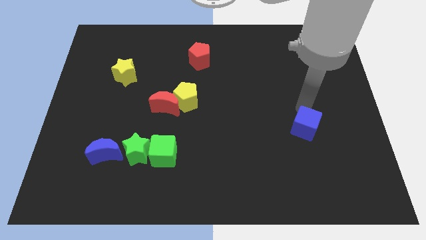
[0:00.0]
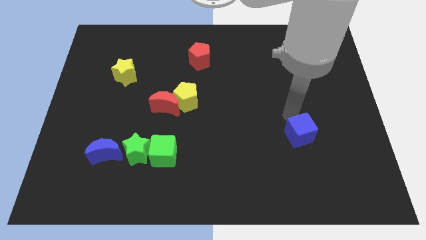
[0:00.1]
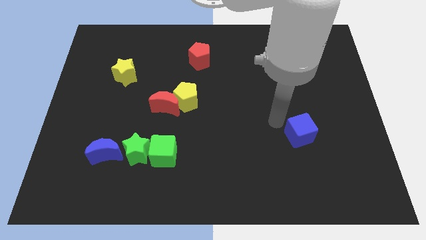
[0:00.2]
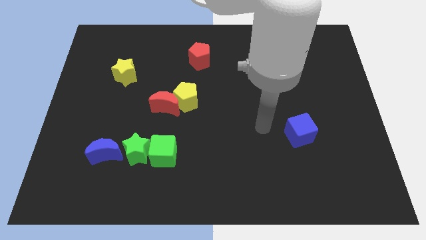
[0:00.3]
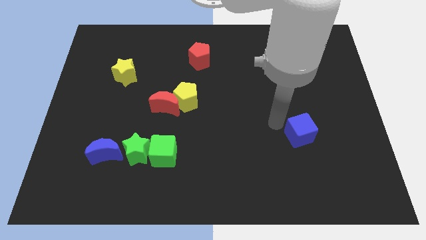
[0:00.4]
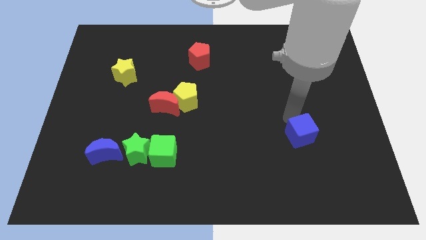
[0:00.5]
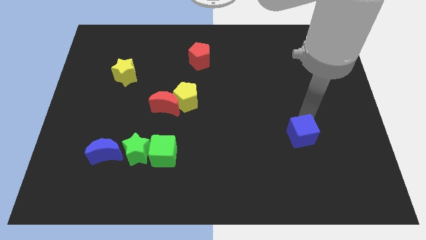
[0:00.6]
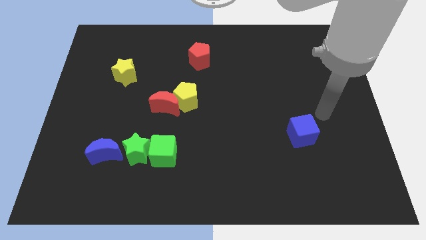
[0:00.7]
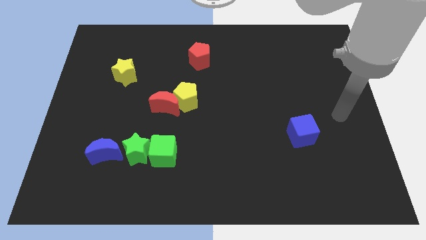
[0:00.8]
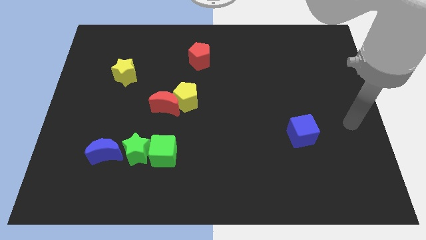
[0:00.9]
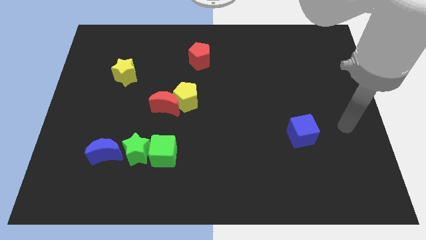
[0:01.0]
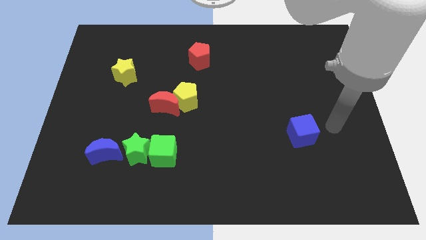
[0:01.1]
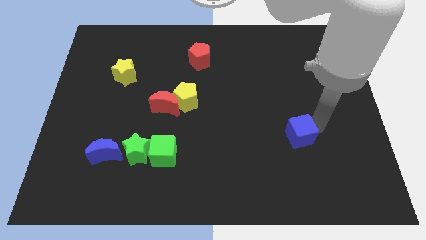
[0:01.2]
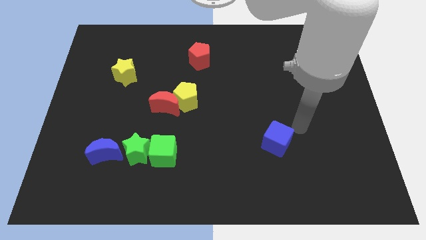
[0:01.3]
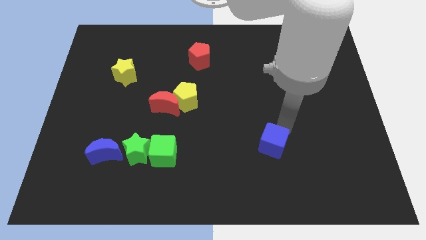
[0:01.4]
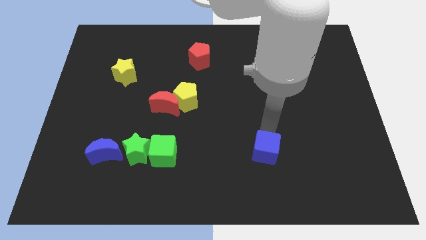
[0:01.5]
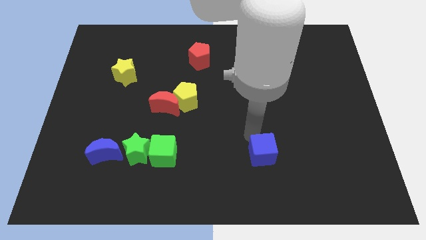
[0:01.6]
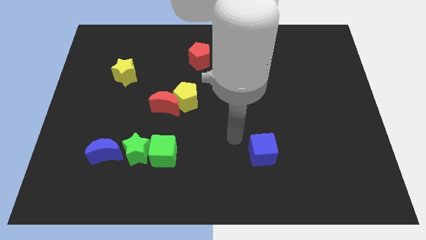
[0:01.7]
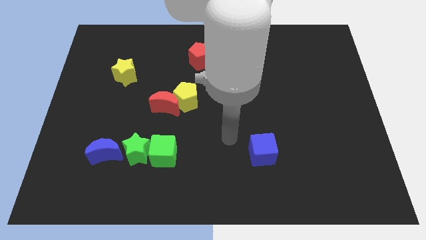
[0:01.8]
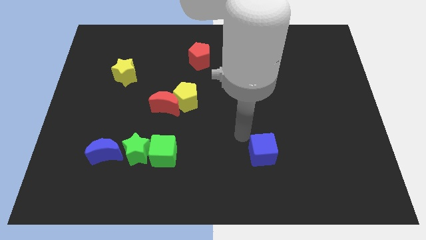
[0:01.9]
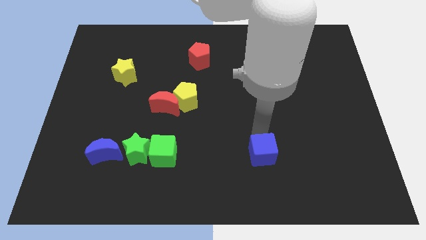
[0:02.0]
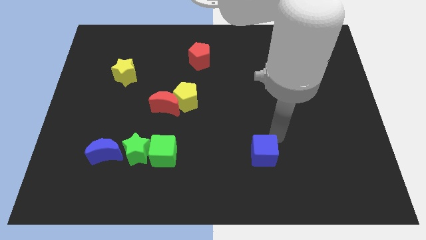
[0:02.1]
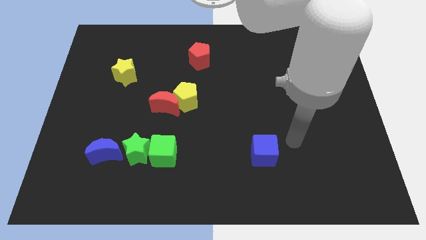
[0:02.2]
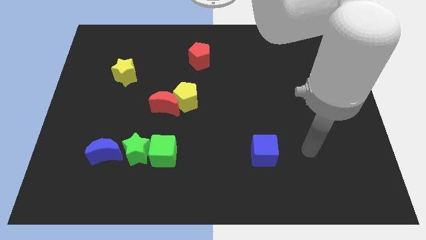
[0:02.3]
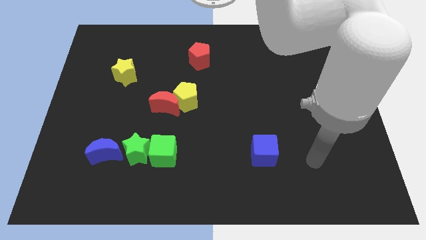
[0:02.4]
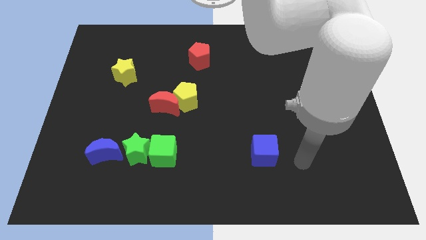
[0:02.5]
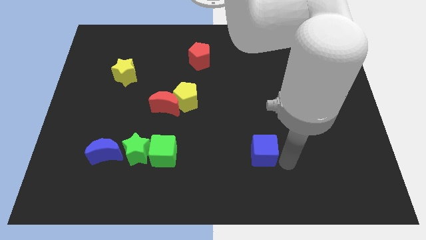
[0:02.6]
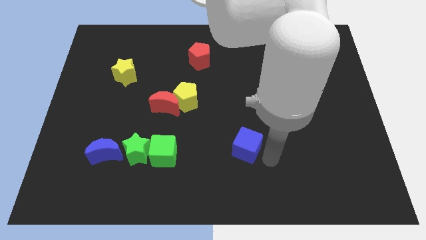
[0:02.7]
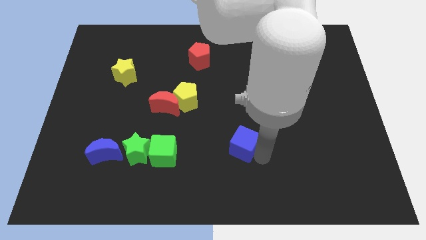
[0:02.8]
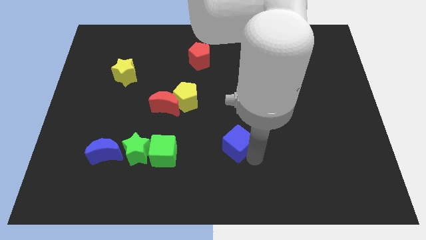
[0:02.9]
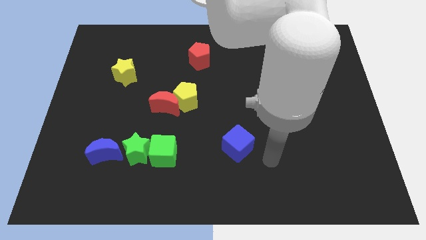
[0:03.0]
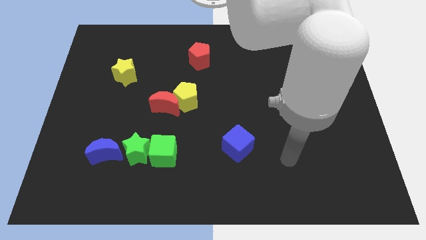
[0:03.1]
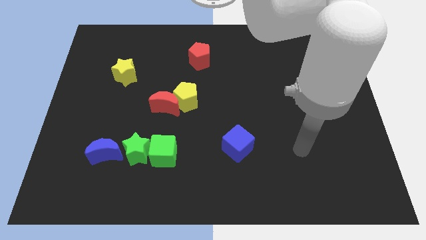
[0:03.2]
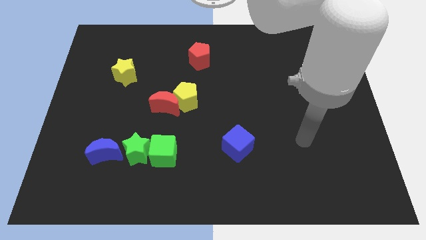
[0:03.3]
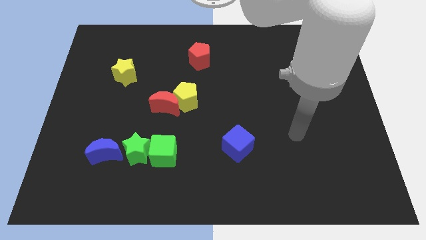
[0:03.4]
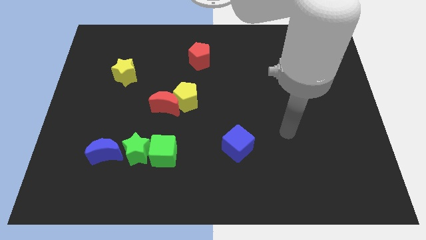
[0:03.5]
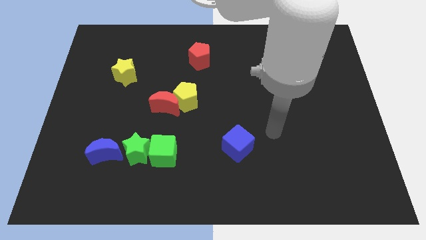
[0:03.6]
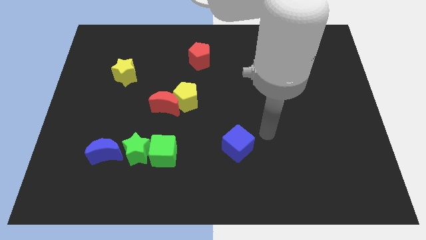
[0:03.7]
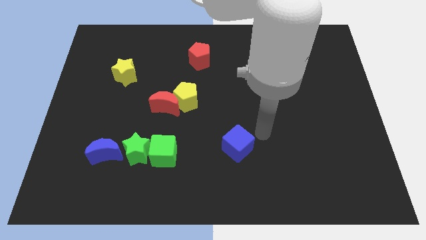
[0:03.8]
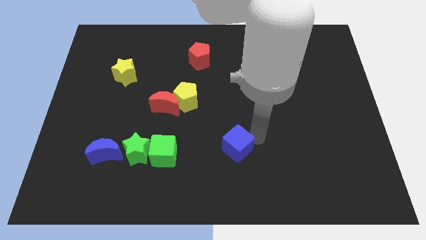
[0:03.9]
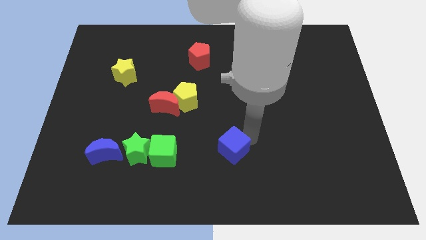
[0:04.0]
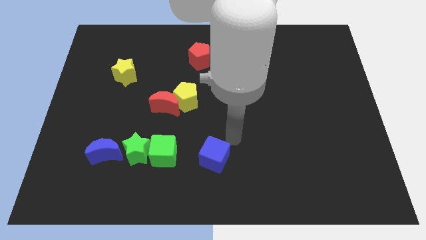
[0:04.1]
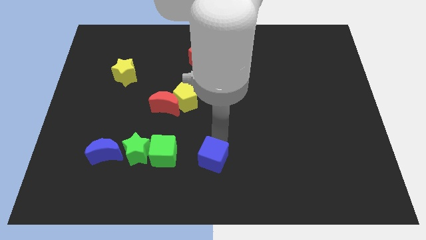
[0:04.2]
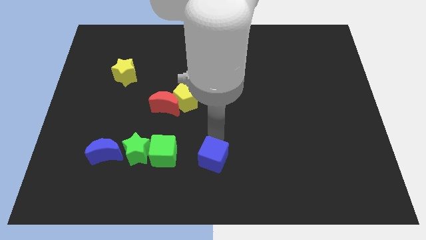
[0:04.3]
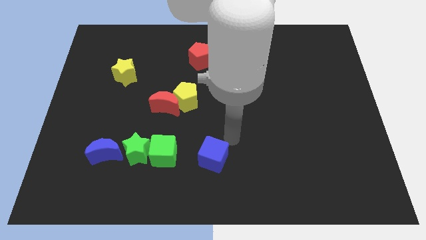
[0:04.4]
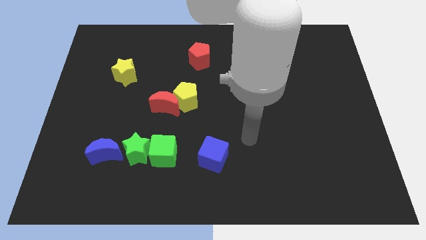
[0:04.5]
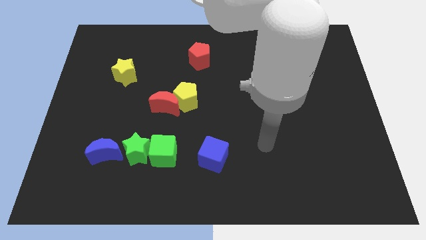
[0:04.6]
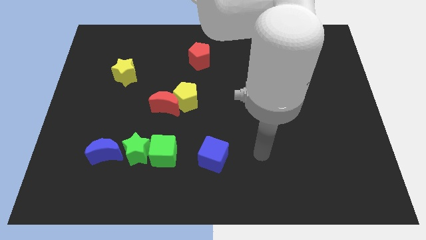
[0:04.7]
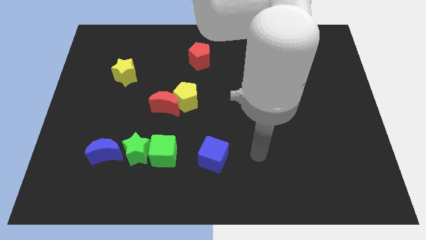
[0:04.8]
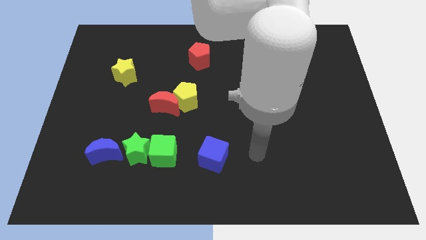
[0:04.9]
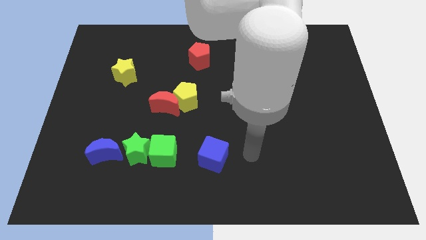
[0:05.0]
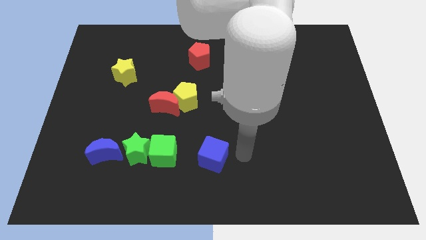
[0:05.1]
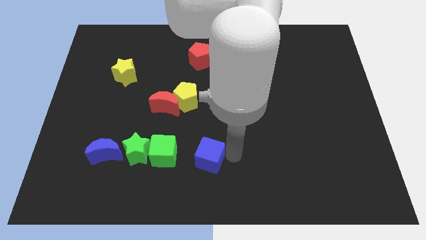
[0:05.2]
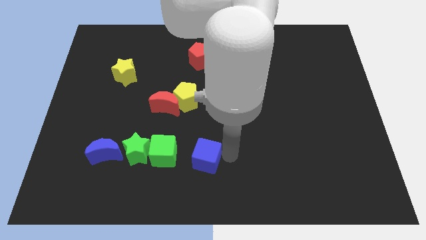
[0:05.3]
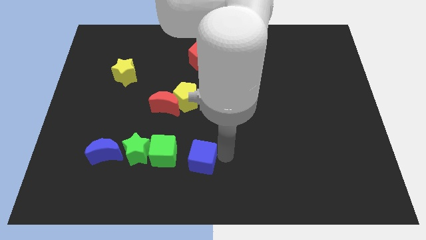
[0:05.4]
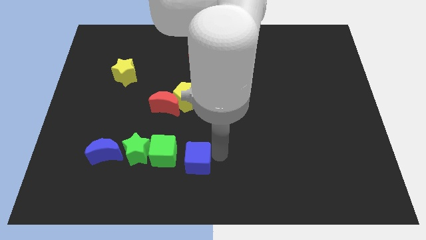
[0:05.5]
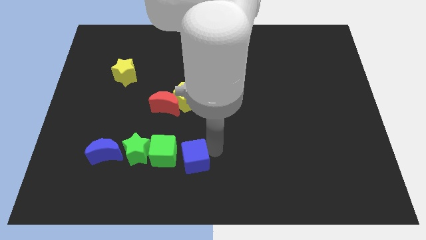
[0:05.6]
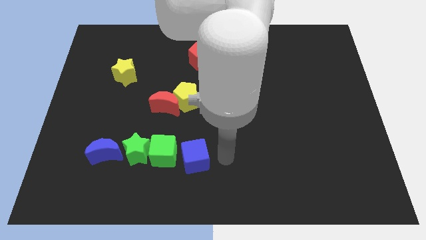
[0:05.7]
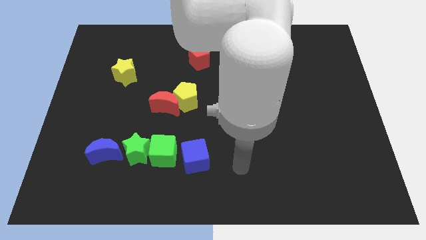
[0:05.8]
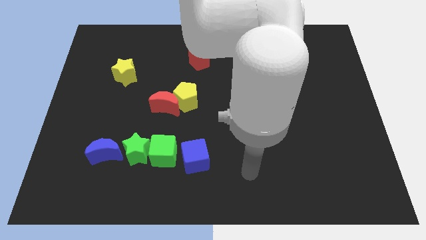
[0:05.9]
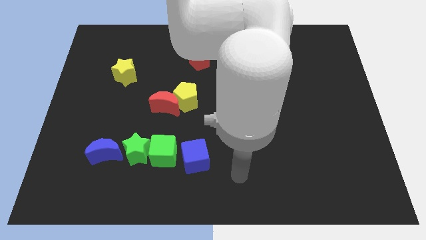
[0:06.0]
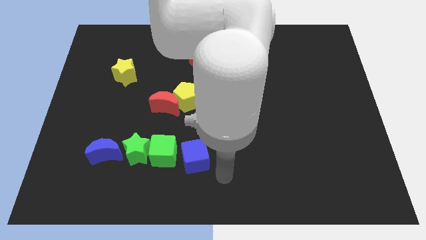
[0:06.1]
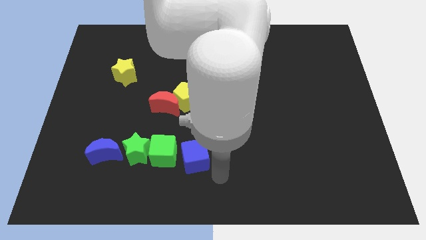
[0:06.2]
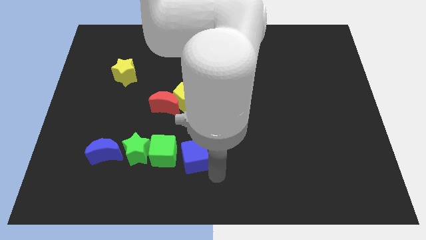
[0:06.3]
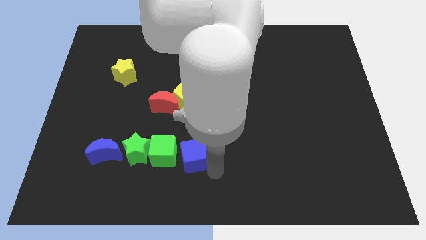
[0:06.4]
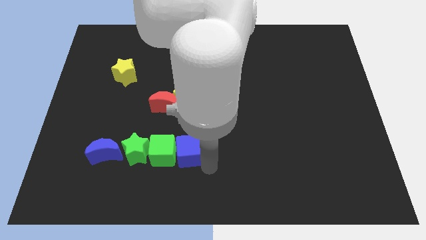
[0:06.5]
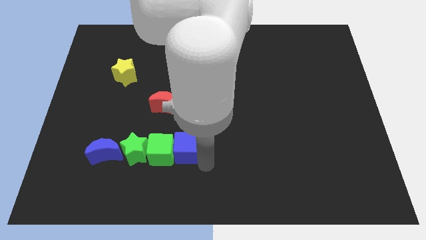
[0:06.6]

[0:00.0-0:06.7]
push the blue cube towards the green cube on bottom center of the board

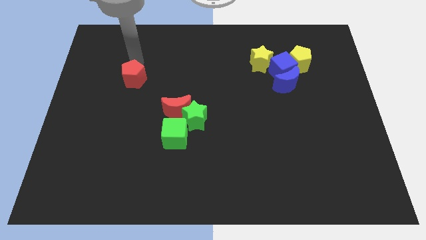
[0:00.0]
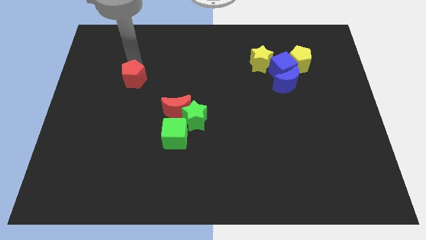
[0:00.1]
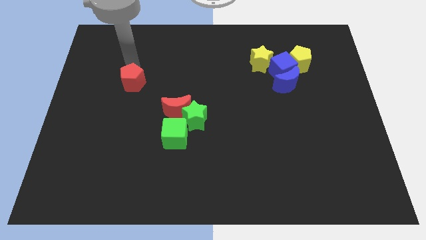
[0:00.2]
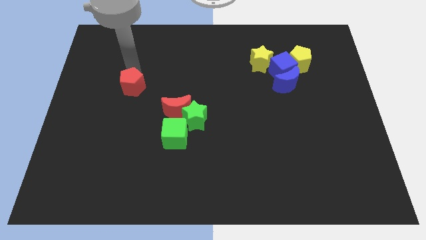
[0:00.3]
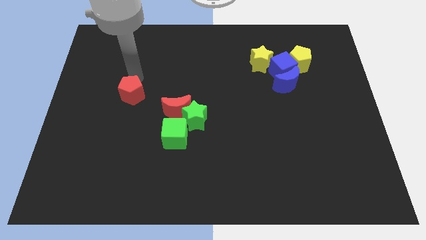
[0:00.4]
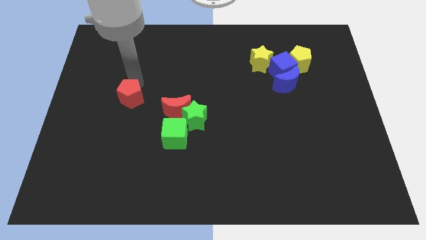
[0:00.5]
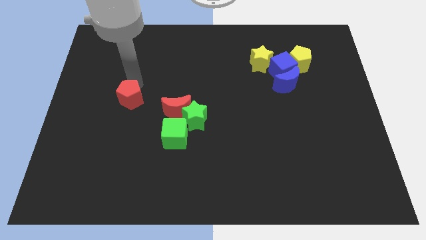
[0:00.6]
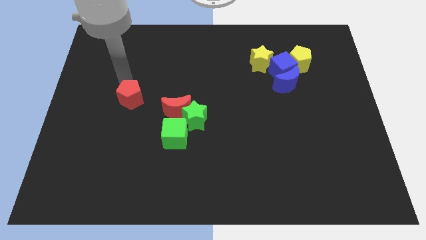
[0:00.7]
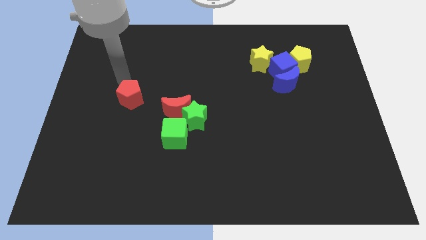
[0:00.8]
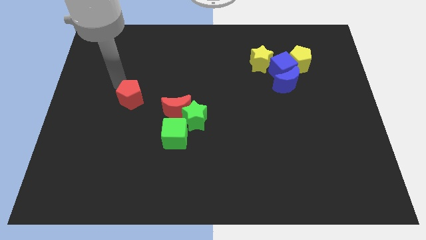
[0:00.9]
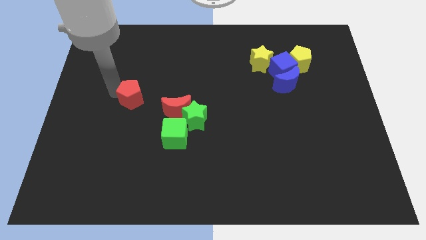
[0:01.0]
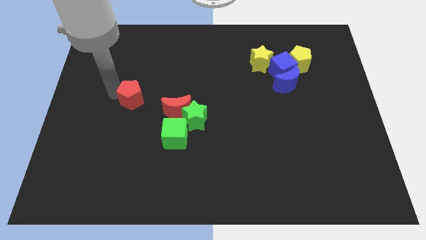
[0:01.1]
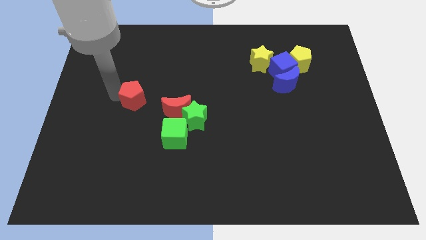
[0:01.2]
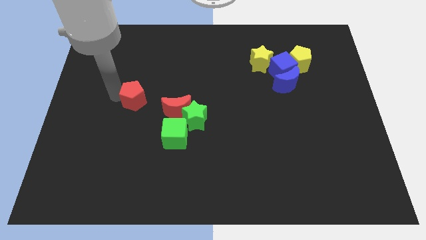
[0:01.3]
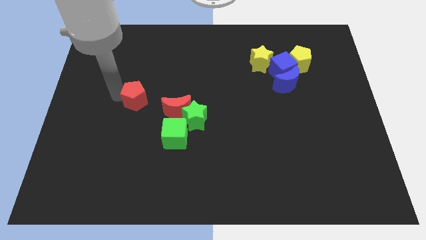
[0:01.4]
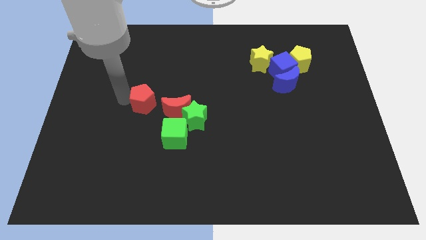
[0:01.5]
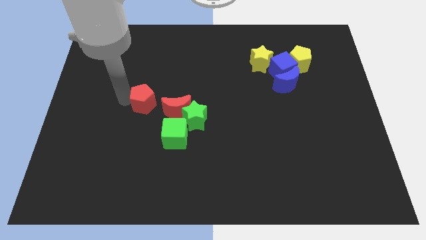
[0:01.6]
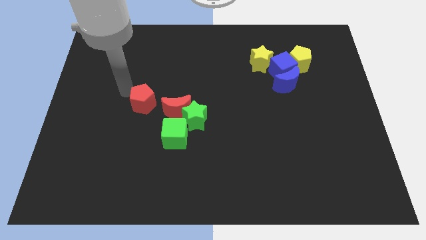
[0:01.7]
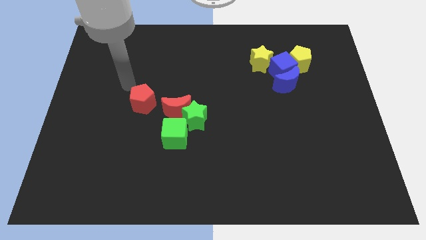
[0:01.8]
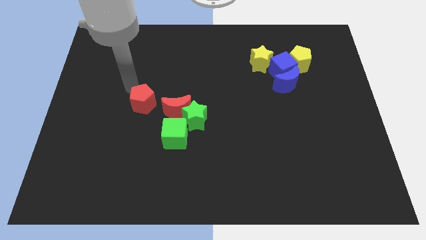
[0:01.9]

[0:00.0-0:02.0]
push the red pentagon to the left of the red crescent

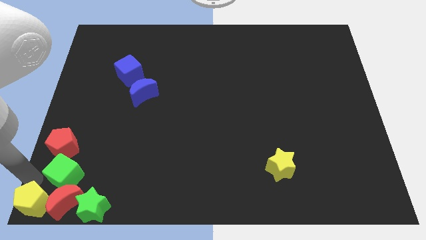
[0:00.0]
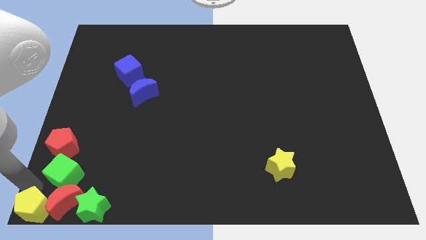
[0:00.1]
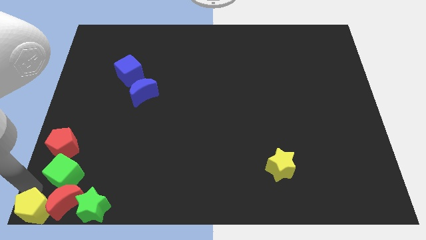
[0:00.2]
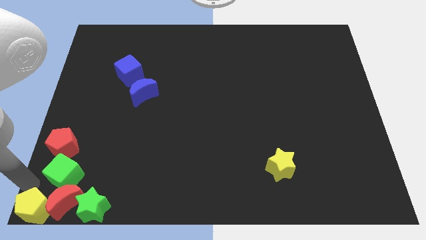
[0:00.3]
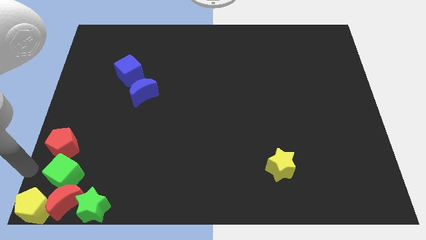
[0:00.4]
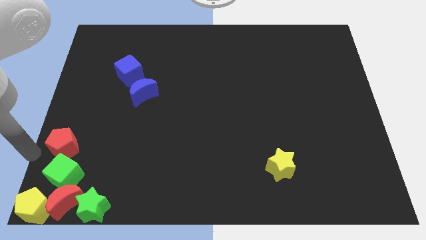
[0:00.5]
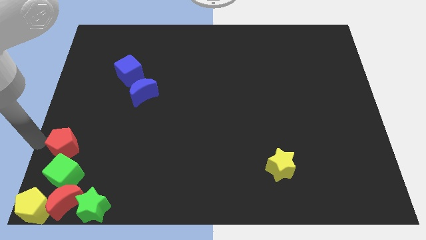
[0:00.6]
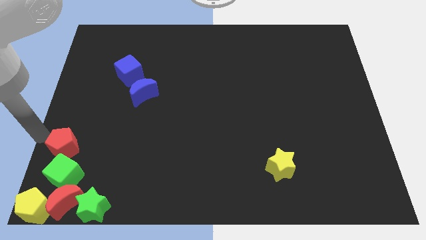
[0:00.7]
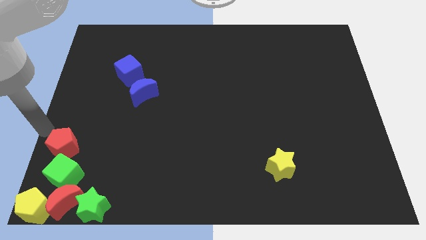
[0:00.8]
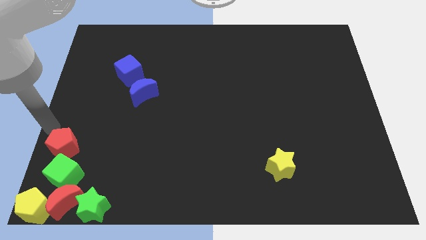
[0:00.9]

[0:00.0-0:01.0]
move yellow pentagon in bottom left
